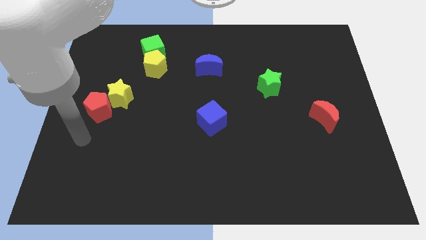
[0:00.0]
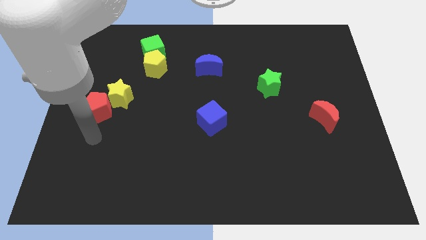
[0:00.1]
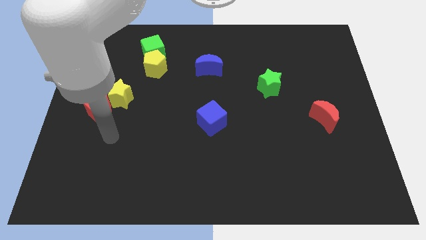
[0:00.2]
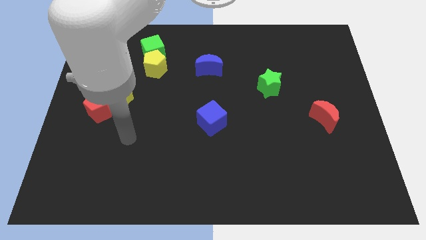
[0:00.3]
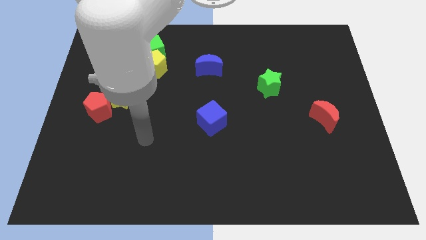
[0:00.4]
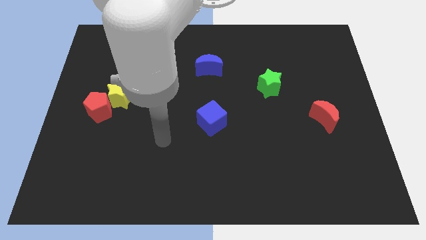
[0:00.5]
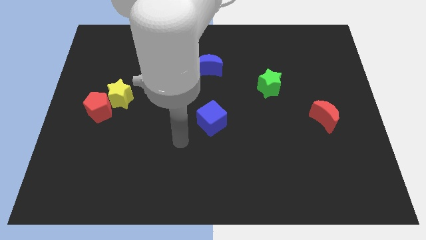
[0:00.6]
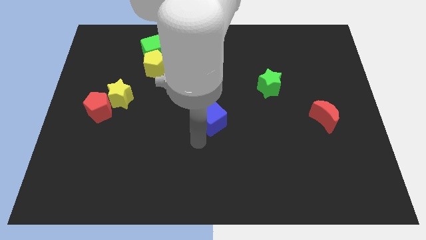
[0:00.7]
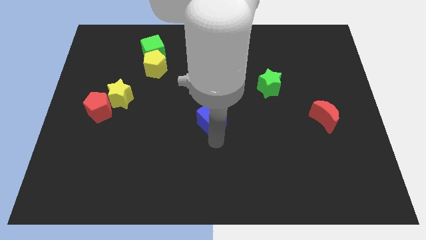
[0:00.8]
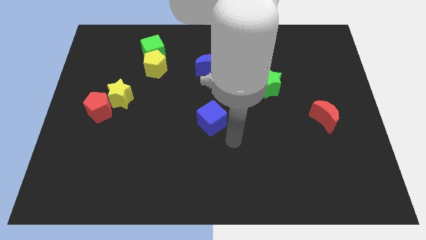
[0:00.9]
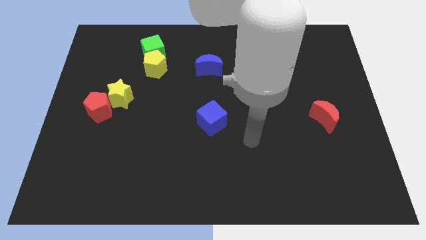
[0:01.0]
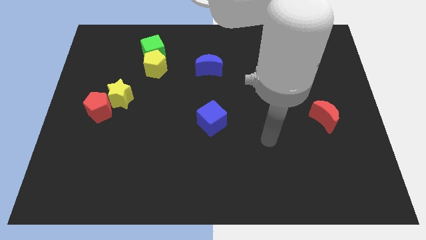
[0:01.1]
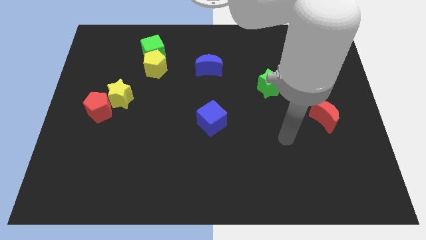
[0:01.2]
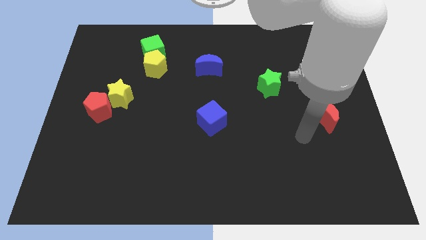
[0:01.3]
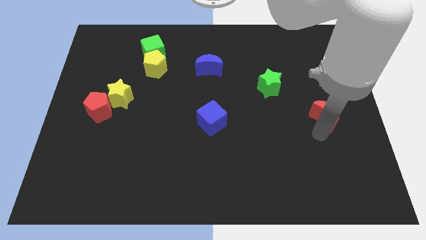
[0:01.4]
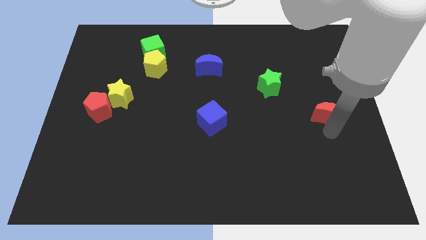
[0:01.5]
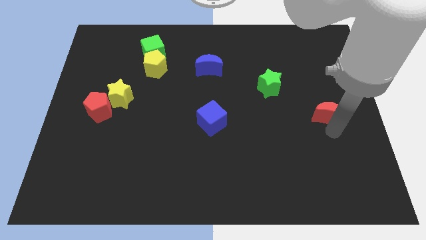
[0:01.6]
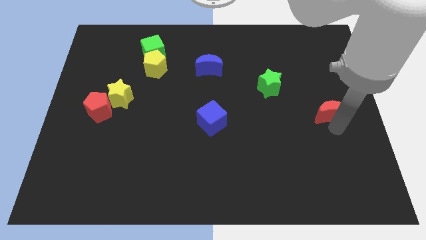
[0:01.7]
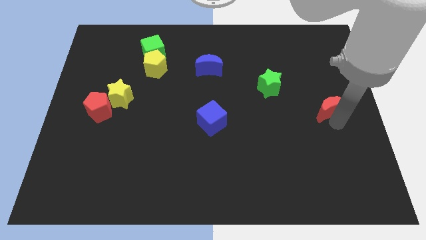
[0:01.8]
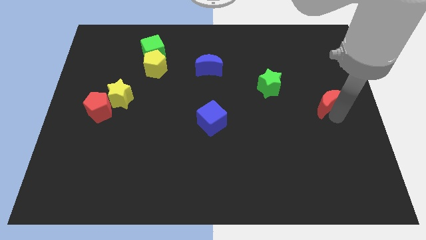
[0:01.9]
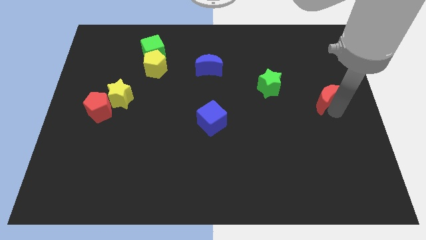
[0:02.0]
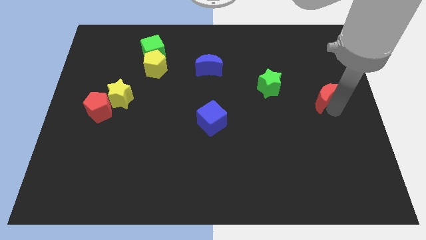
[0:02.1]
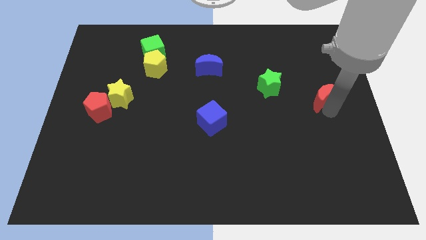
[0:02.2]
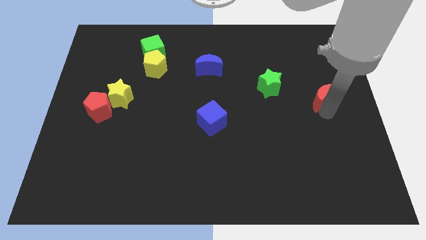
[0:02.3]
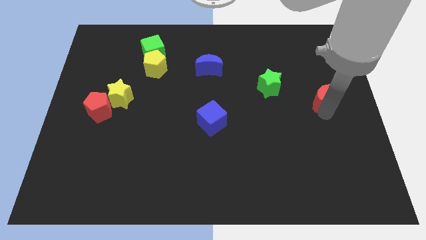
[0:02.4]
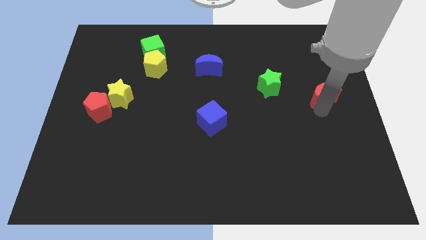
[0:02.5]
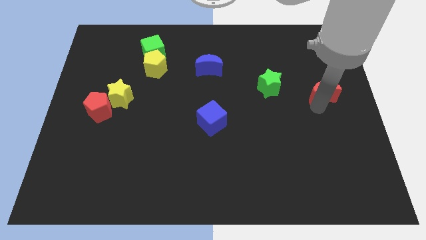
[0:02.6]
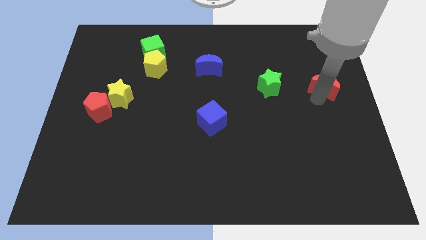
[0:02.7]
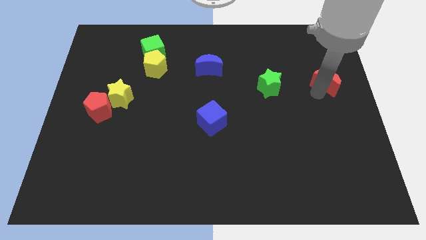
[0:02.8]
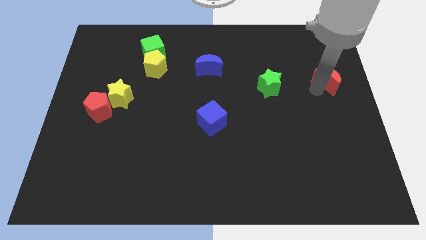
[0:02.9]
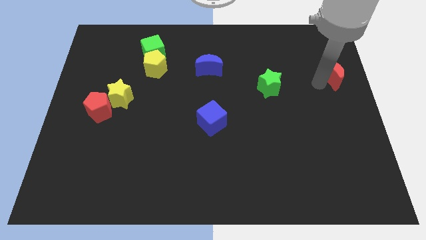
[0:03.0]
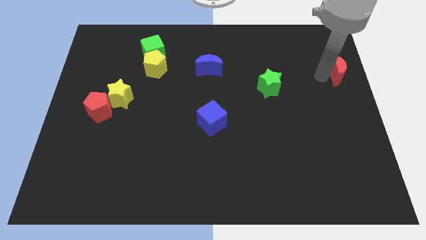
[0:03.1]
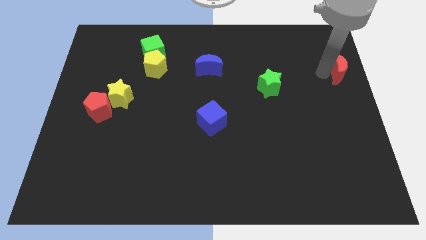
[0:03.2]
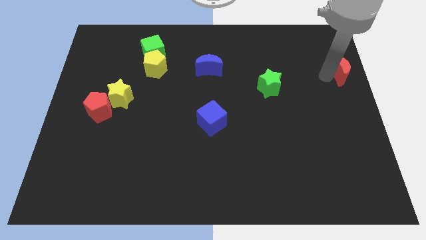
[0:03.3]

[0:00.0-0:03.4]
move the red moon towards top right side

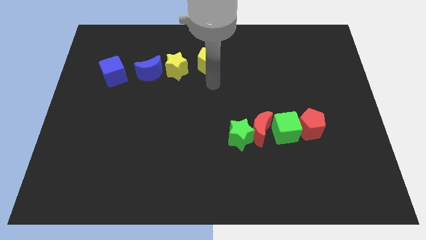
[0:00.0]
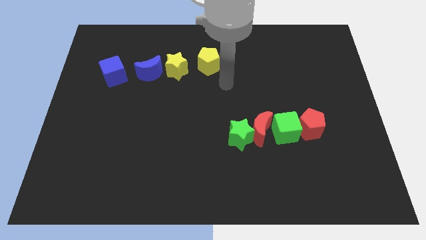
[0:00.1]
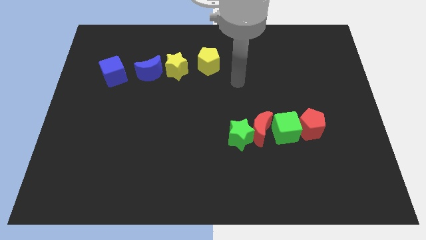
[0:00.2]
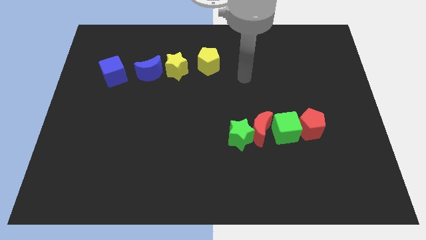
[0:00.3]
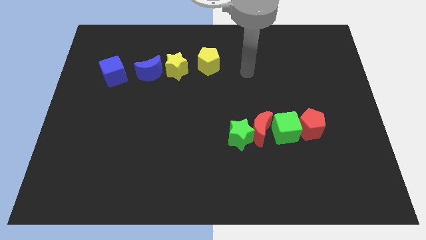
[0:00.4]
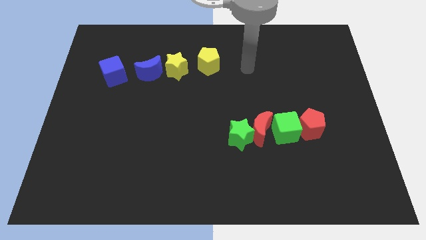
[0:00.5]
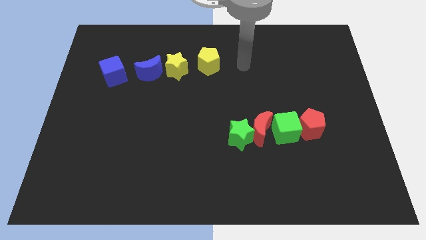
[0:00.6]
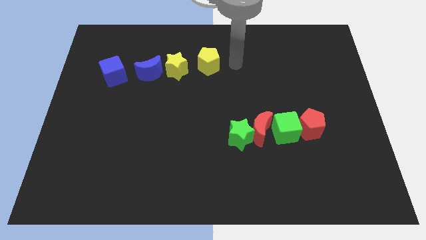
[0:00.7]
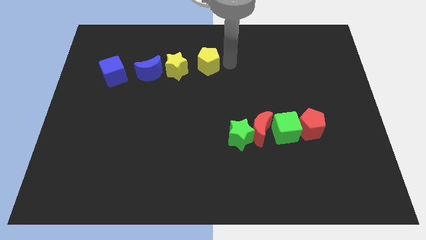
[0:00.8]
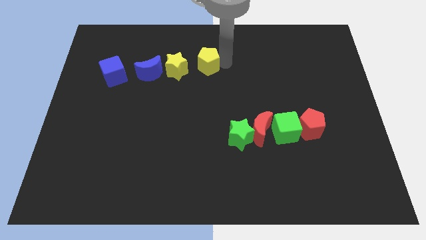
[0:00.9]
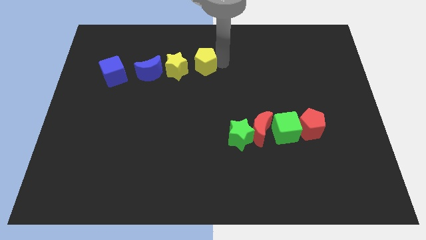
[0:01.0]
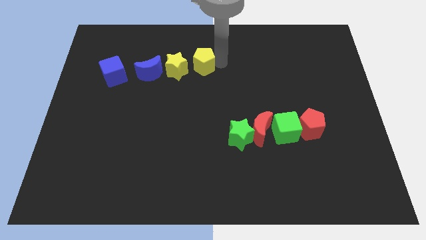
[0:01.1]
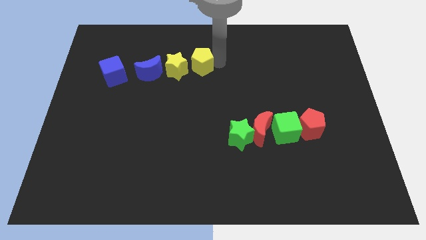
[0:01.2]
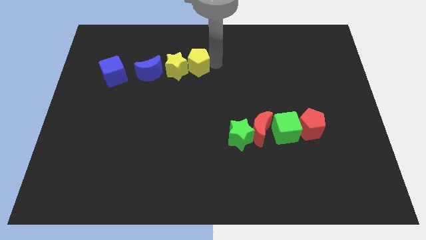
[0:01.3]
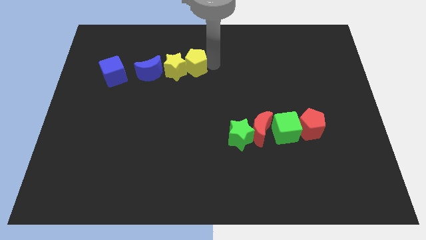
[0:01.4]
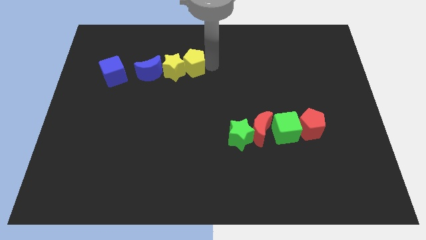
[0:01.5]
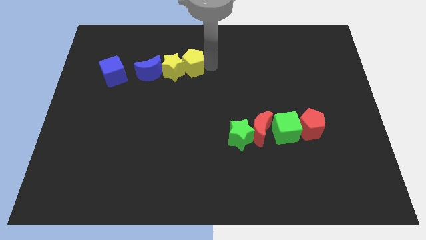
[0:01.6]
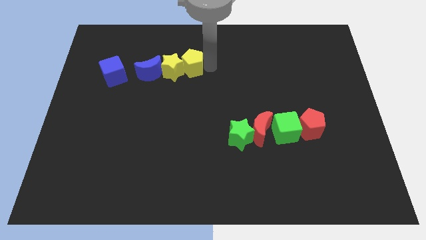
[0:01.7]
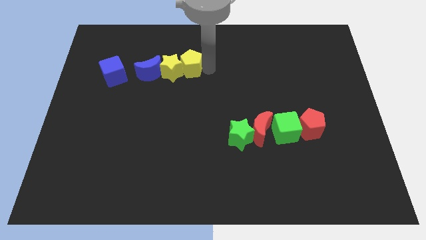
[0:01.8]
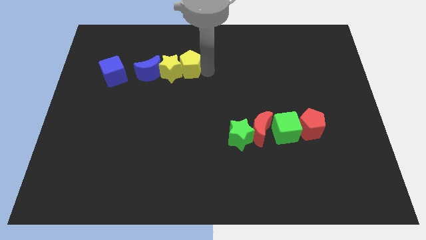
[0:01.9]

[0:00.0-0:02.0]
move yellow pentagon into the yellow star

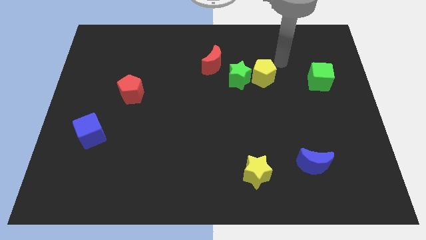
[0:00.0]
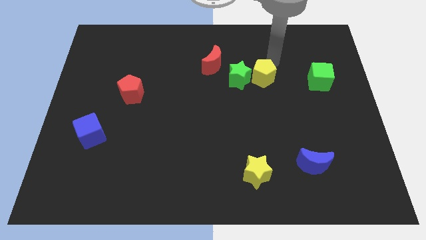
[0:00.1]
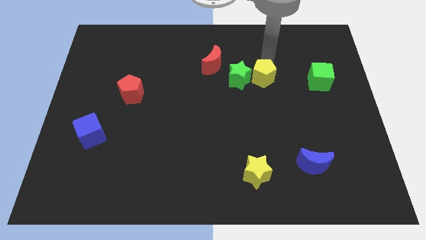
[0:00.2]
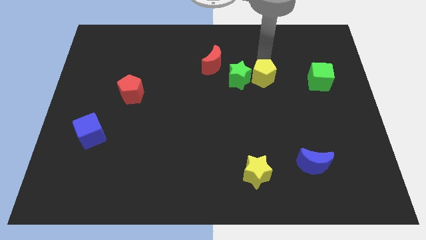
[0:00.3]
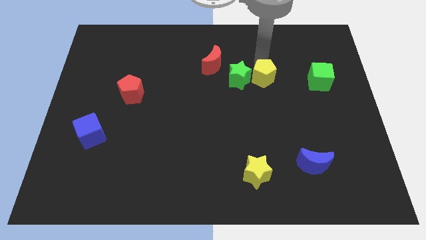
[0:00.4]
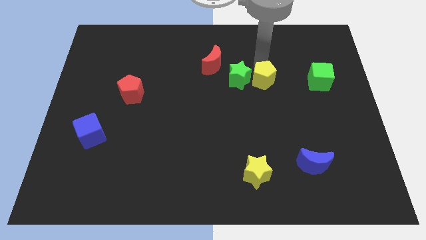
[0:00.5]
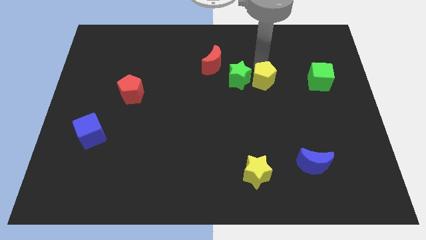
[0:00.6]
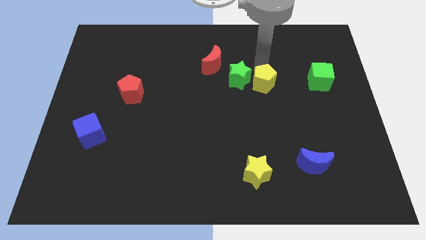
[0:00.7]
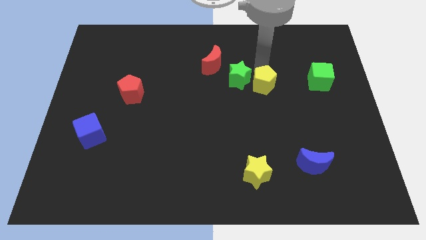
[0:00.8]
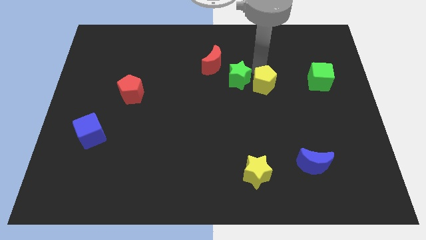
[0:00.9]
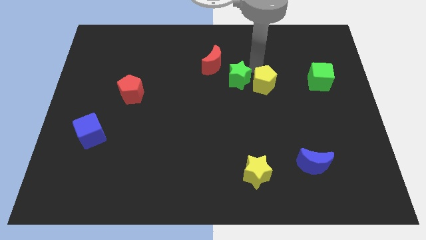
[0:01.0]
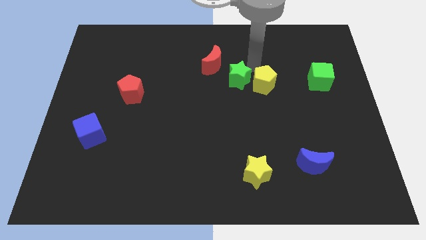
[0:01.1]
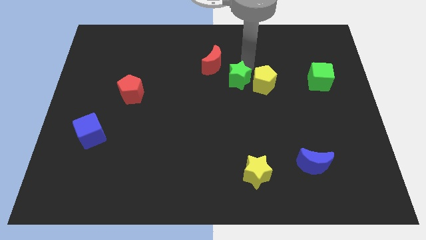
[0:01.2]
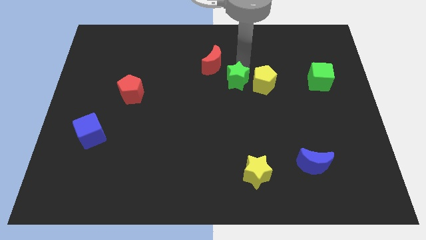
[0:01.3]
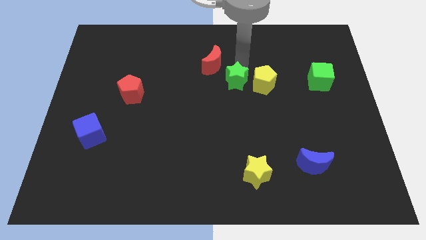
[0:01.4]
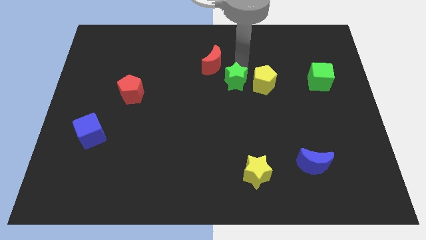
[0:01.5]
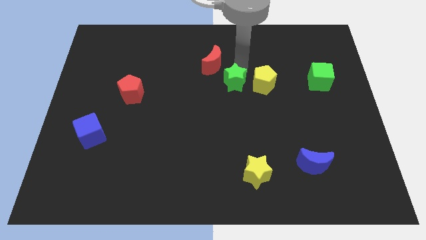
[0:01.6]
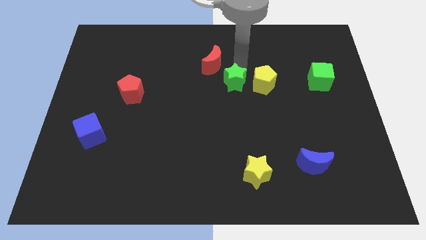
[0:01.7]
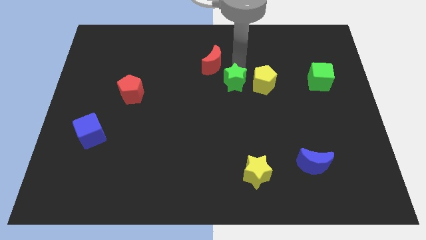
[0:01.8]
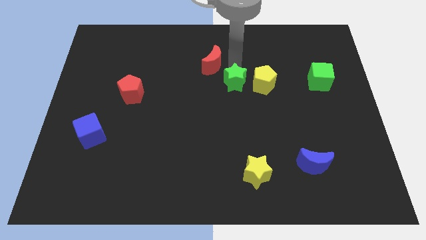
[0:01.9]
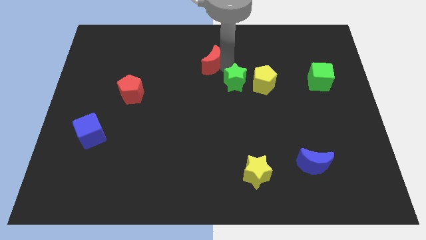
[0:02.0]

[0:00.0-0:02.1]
slightly move the green star to the left side of the yellow pentagon

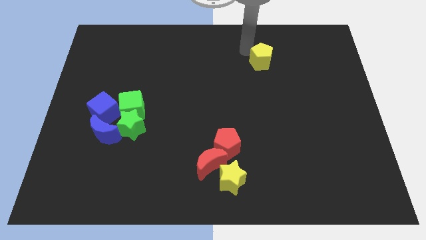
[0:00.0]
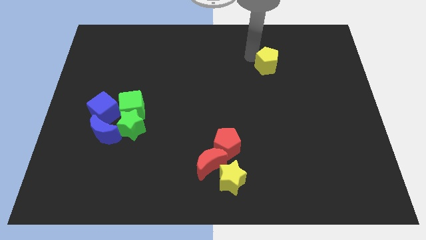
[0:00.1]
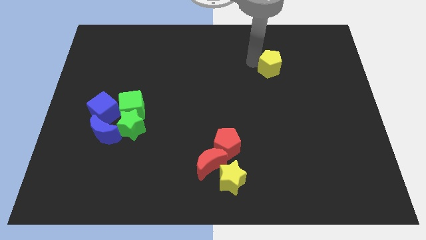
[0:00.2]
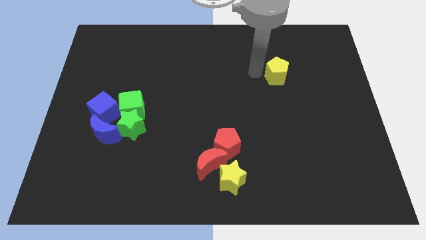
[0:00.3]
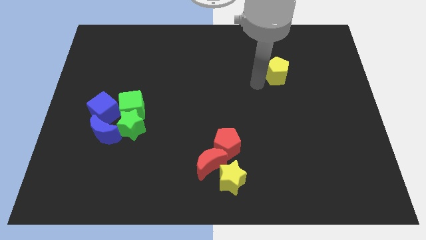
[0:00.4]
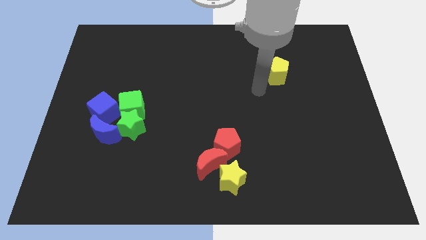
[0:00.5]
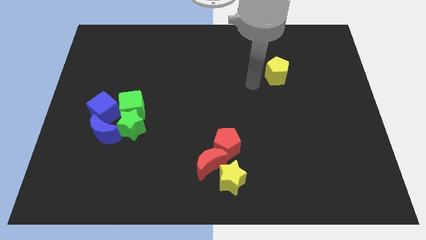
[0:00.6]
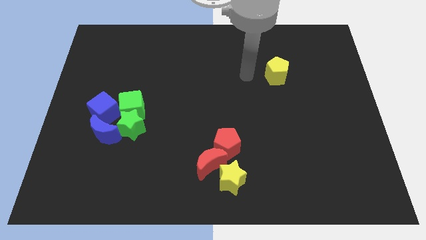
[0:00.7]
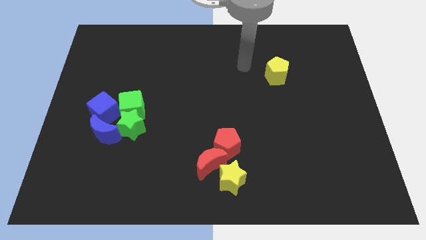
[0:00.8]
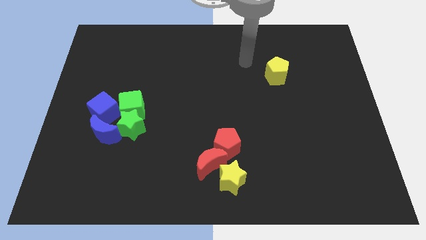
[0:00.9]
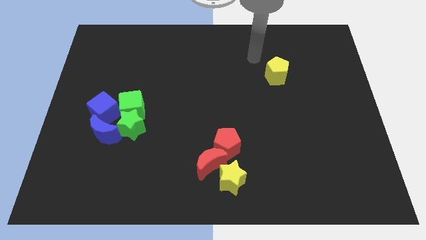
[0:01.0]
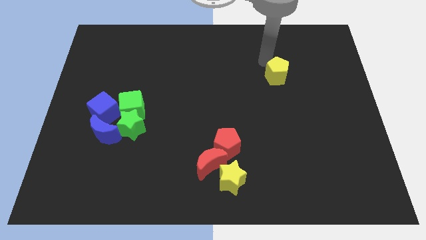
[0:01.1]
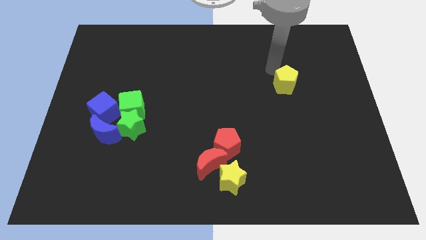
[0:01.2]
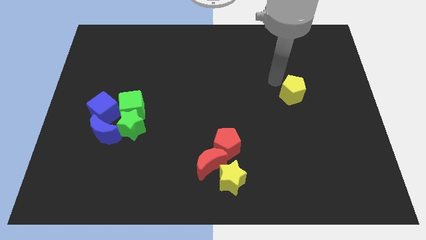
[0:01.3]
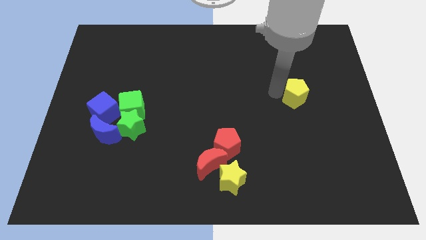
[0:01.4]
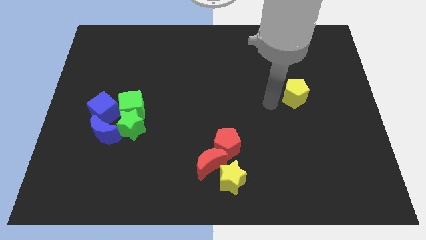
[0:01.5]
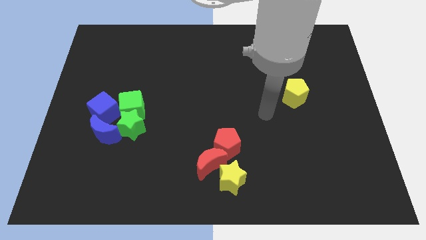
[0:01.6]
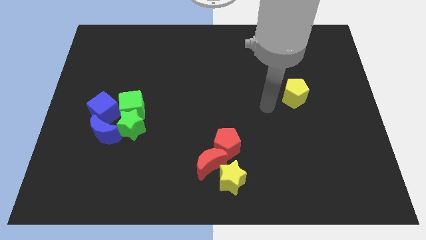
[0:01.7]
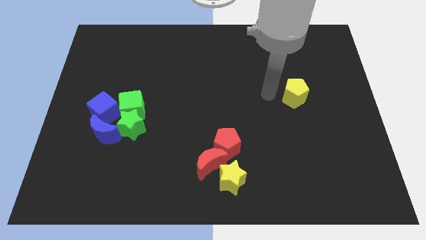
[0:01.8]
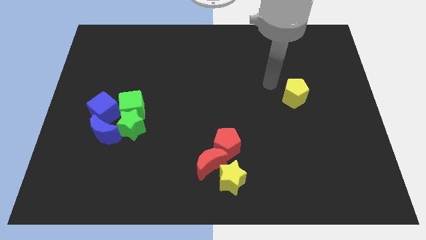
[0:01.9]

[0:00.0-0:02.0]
push the yellow pentagon towards the right side center
